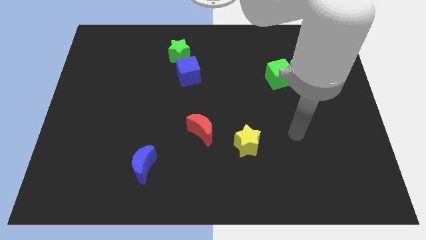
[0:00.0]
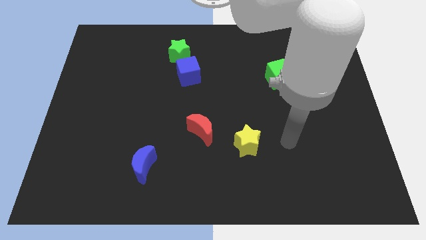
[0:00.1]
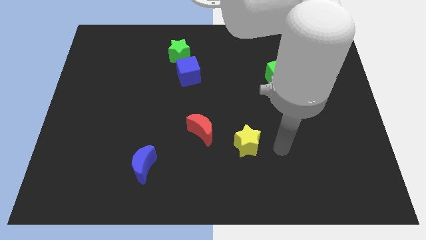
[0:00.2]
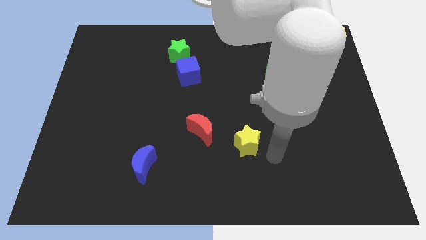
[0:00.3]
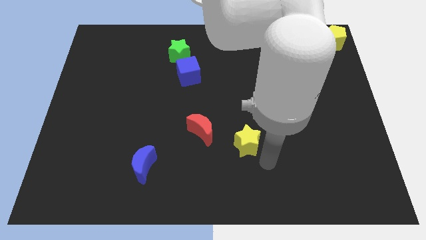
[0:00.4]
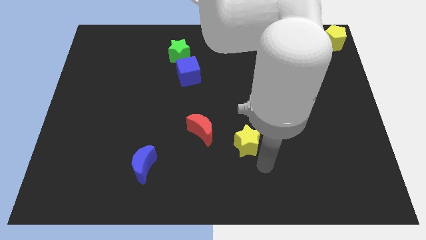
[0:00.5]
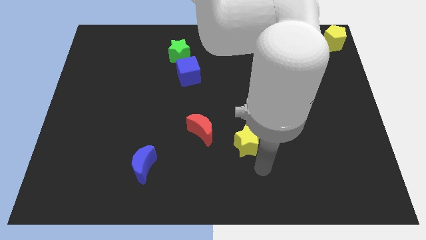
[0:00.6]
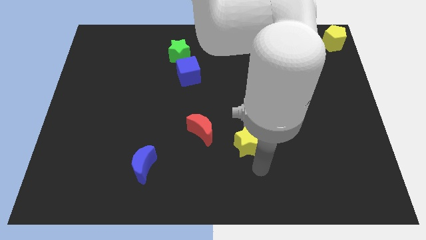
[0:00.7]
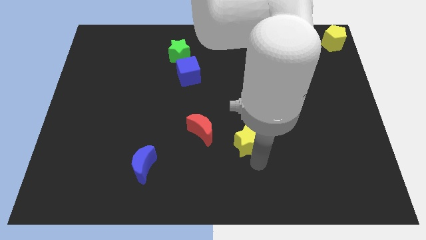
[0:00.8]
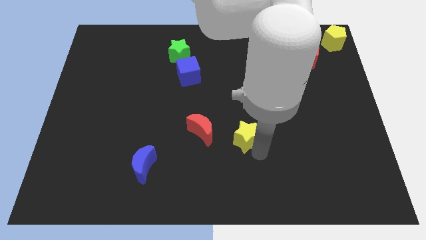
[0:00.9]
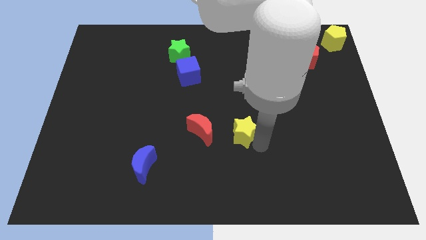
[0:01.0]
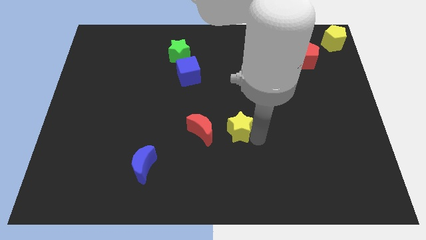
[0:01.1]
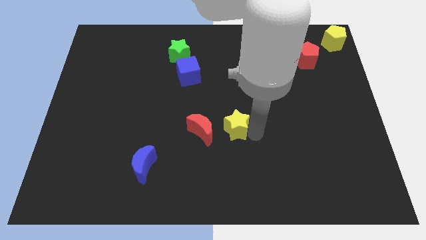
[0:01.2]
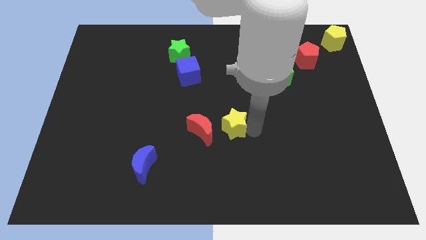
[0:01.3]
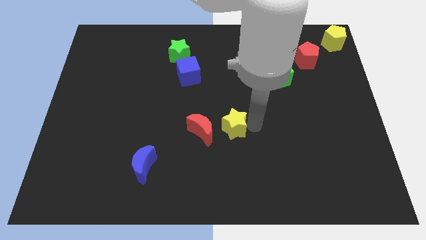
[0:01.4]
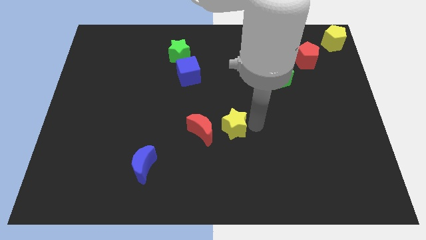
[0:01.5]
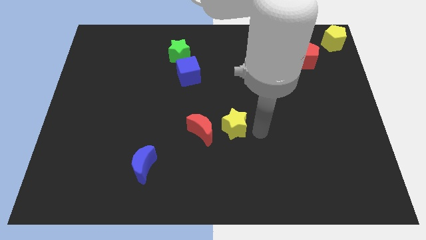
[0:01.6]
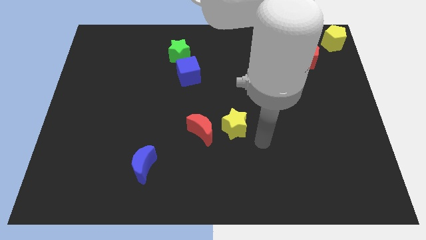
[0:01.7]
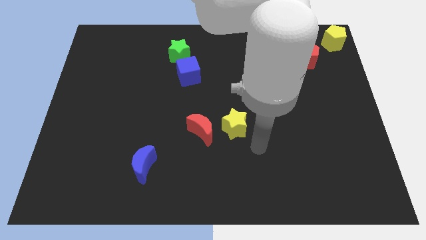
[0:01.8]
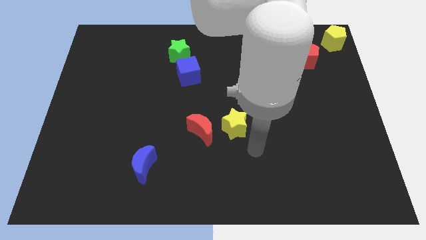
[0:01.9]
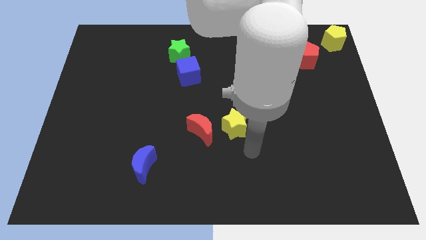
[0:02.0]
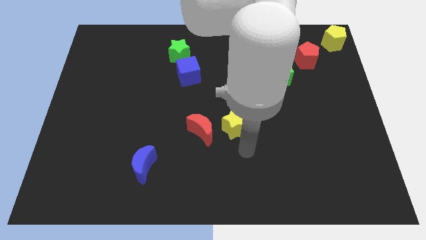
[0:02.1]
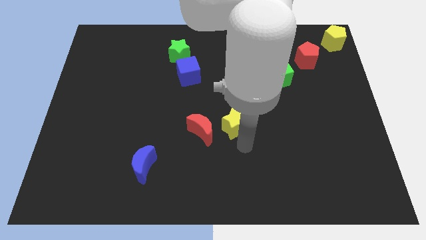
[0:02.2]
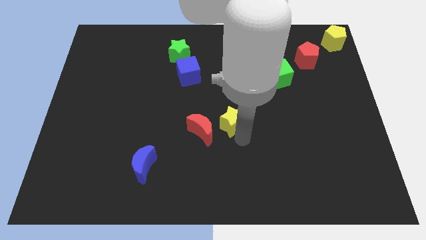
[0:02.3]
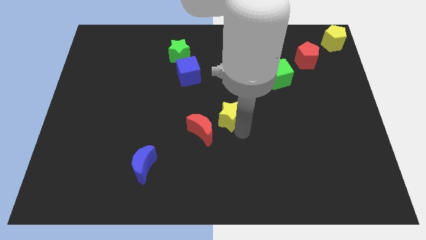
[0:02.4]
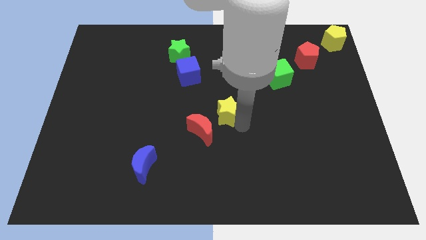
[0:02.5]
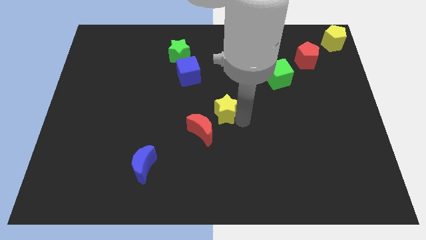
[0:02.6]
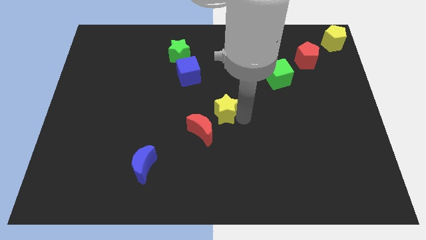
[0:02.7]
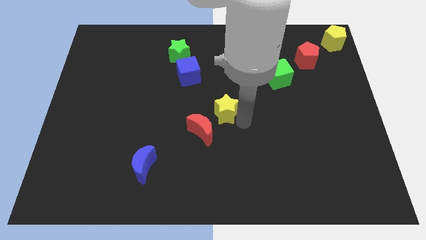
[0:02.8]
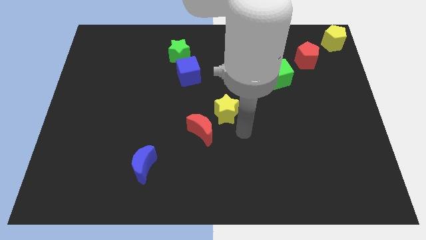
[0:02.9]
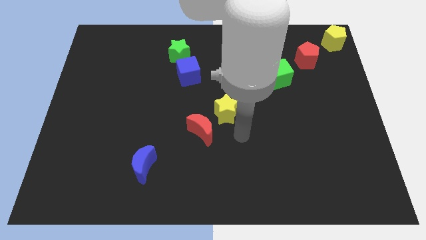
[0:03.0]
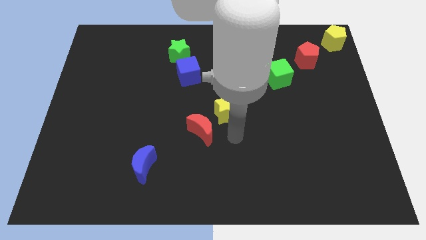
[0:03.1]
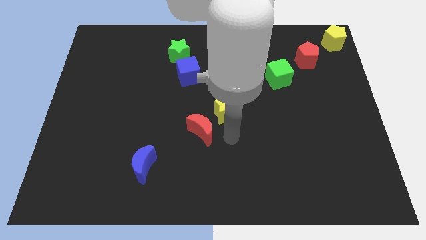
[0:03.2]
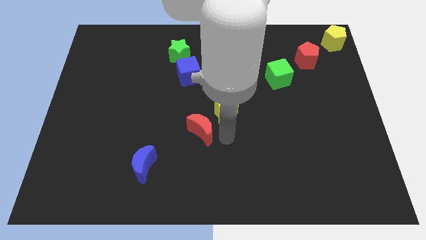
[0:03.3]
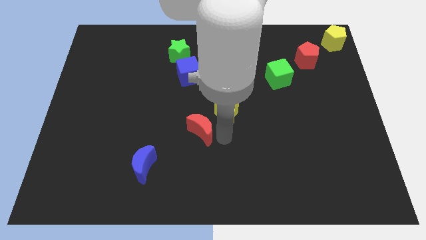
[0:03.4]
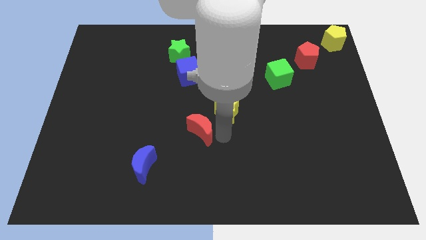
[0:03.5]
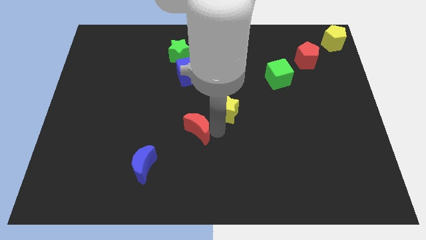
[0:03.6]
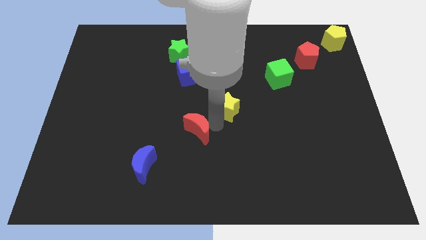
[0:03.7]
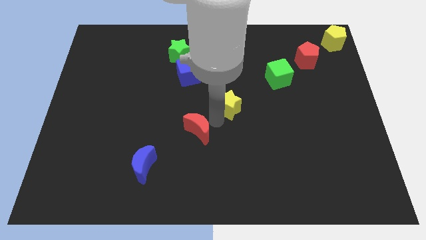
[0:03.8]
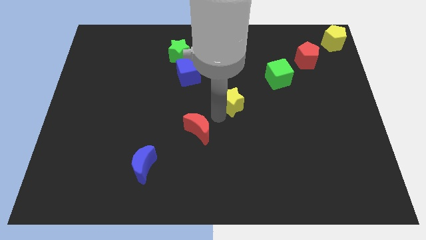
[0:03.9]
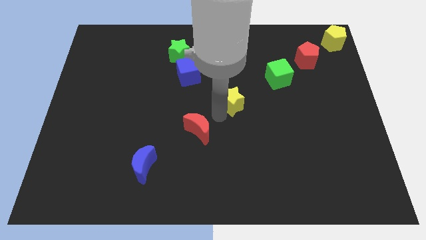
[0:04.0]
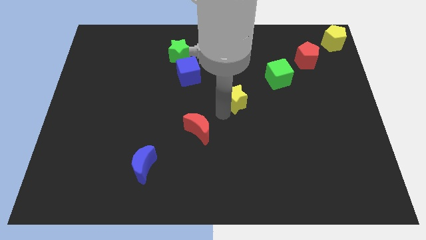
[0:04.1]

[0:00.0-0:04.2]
push the yellow star towards the center of the board

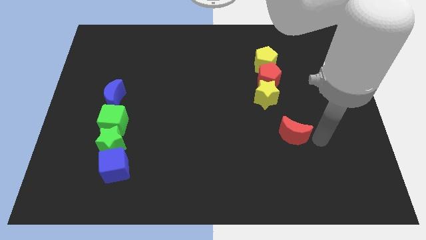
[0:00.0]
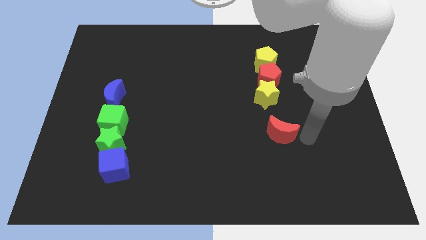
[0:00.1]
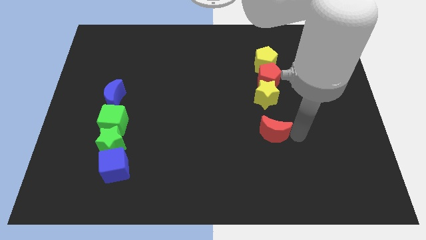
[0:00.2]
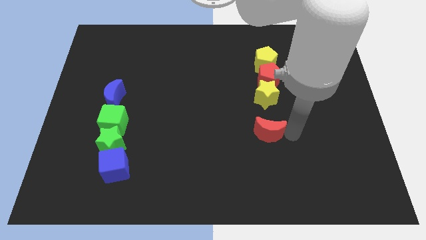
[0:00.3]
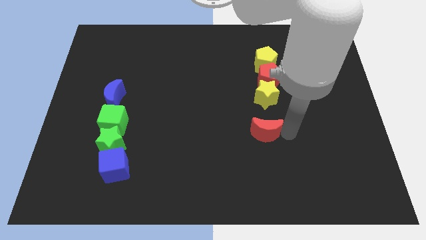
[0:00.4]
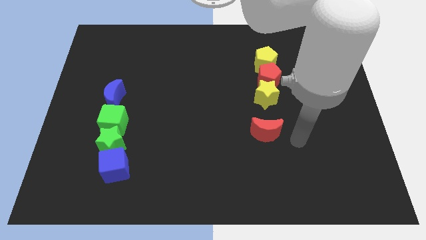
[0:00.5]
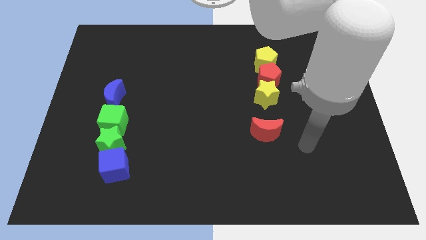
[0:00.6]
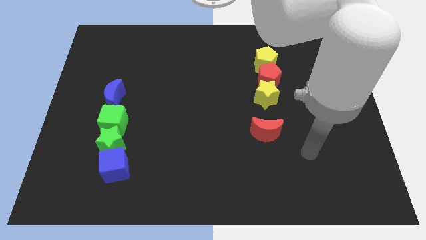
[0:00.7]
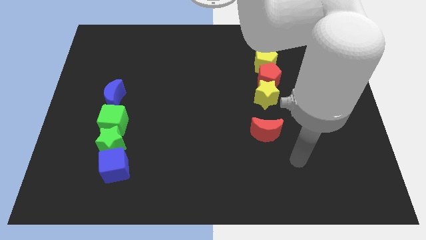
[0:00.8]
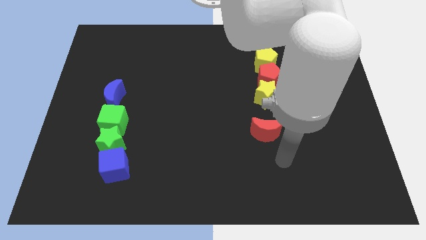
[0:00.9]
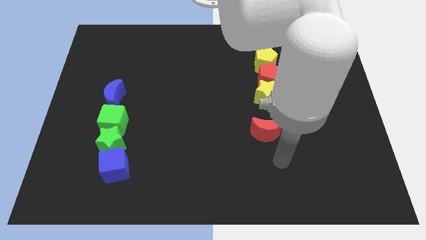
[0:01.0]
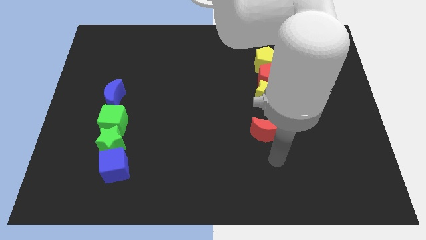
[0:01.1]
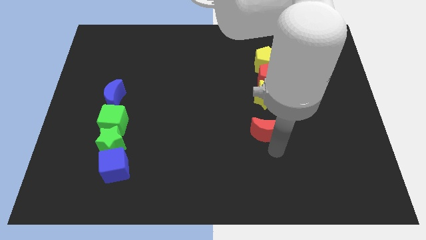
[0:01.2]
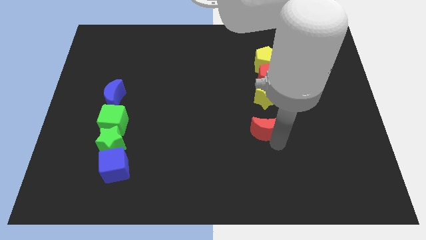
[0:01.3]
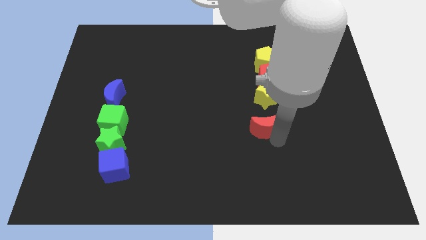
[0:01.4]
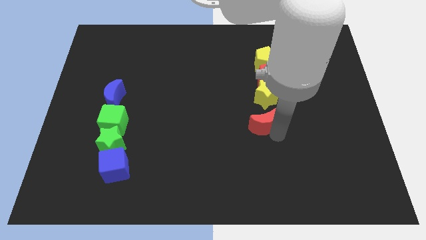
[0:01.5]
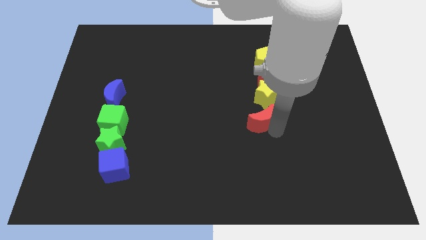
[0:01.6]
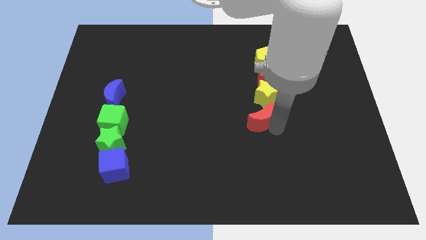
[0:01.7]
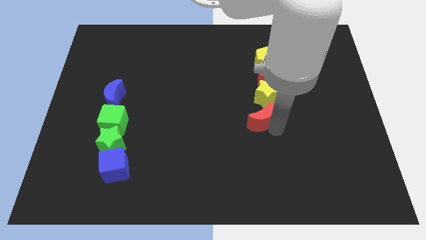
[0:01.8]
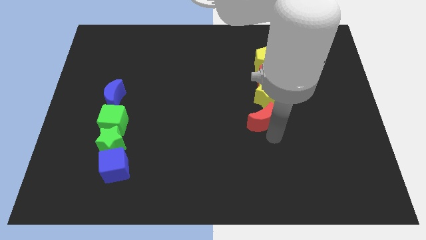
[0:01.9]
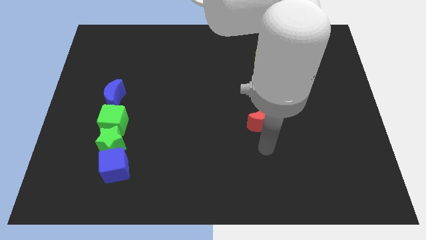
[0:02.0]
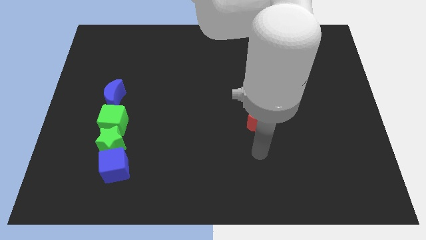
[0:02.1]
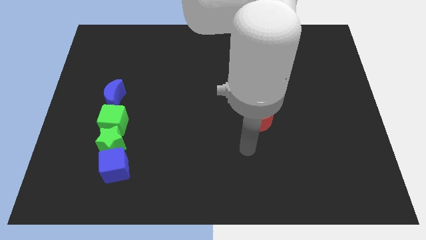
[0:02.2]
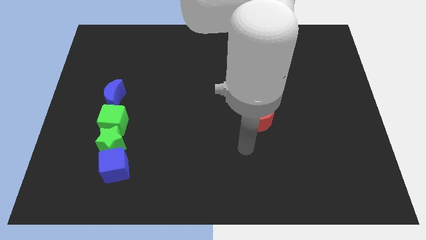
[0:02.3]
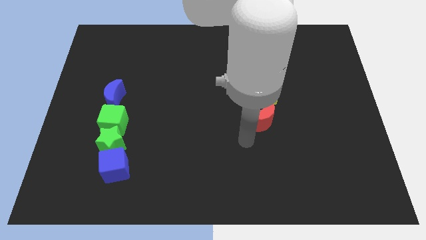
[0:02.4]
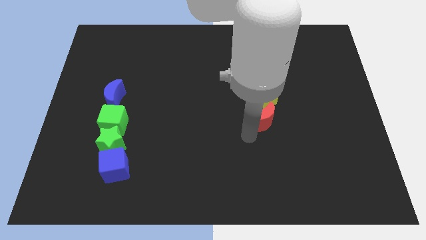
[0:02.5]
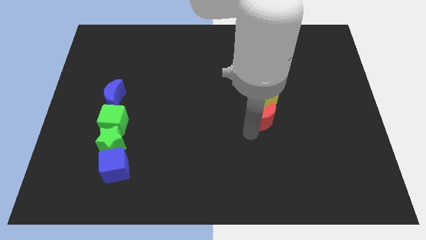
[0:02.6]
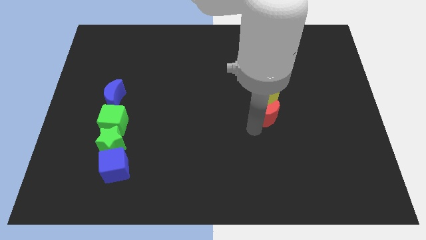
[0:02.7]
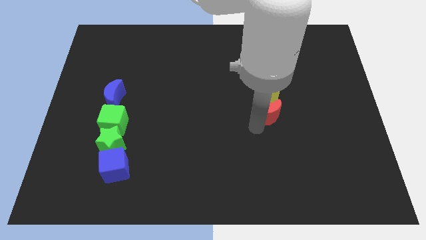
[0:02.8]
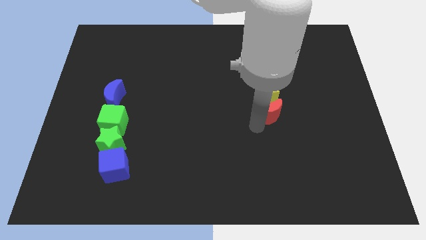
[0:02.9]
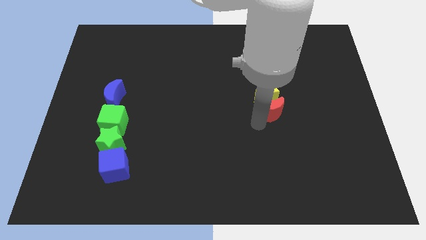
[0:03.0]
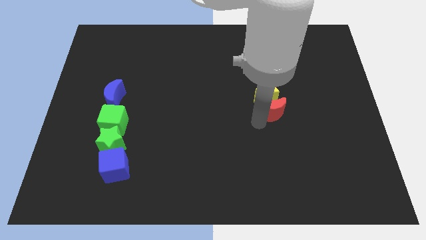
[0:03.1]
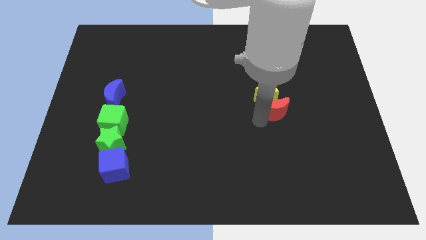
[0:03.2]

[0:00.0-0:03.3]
push the red crescent into the yellow star

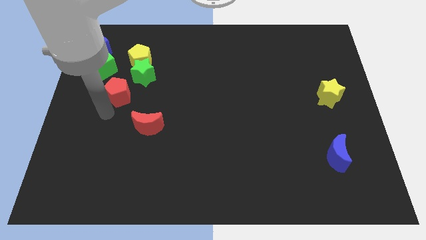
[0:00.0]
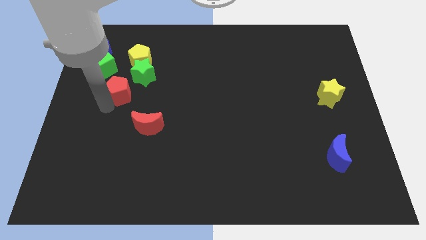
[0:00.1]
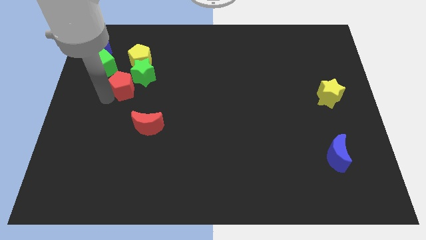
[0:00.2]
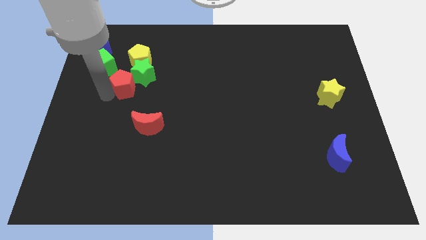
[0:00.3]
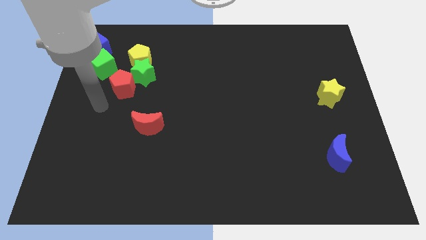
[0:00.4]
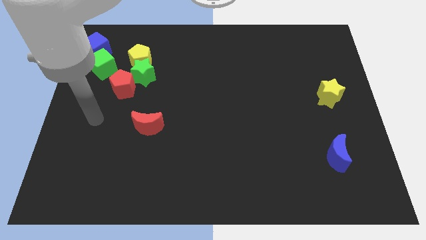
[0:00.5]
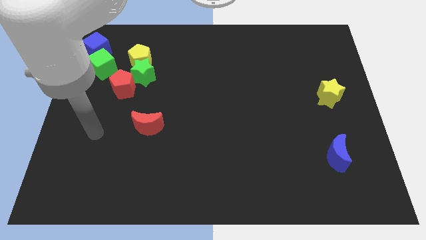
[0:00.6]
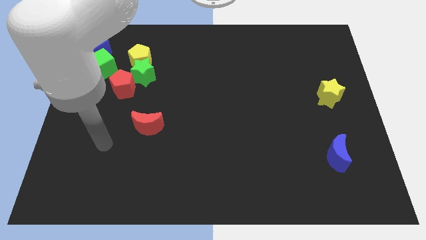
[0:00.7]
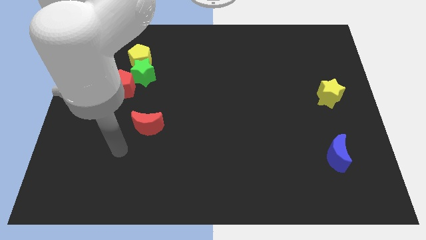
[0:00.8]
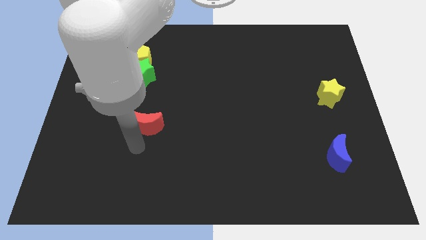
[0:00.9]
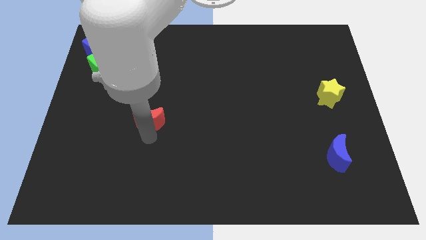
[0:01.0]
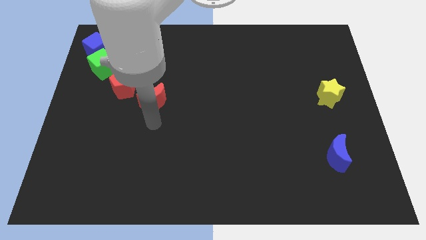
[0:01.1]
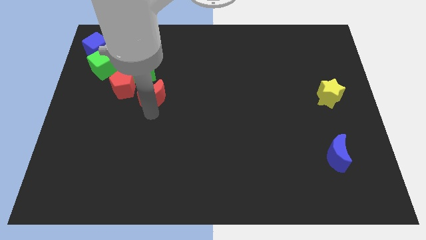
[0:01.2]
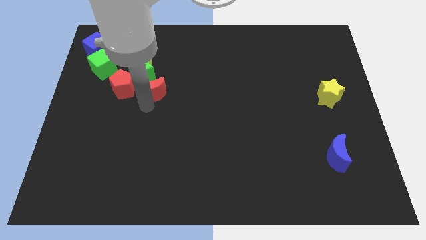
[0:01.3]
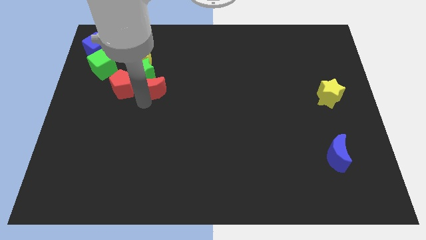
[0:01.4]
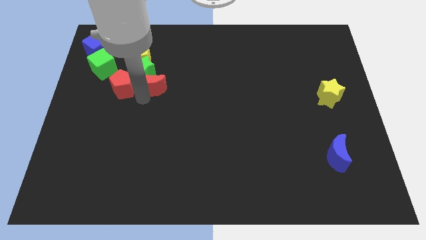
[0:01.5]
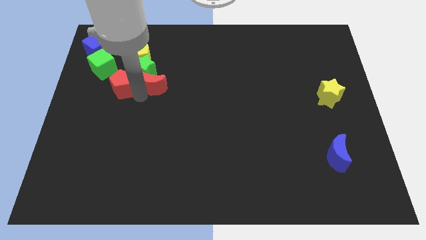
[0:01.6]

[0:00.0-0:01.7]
push a group of blocks towards upward
